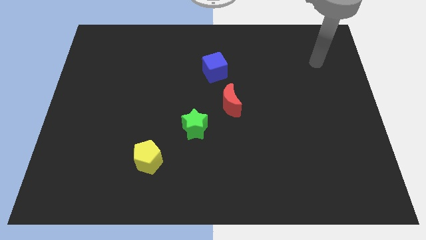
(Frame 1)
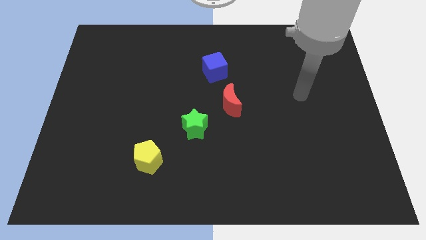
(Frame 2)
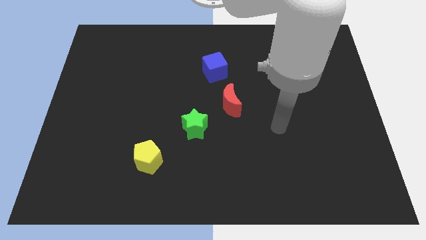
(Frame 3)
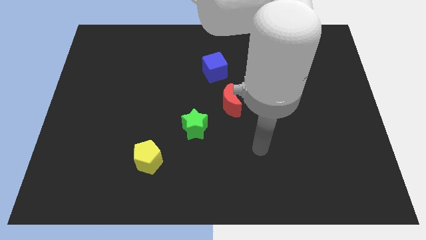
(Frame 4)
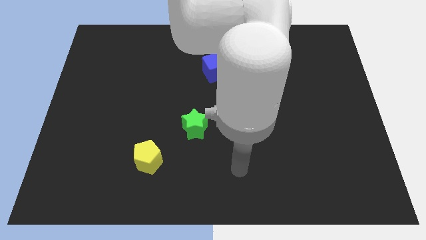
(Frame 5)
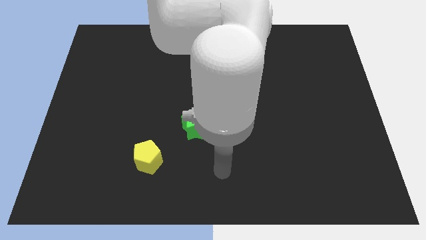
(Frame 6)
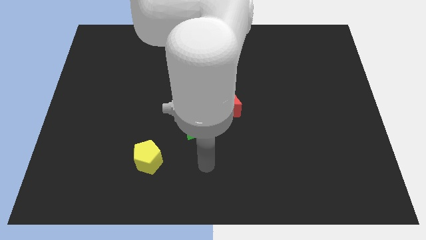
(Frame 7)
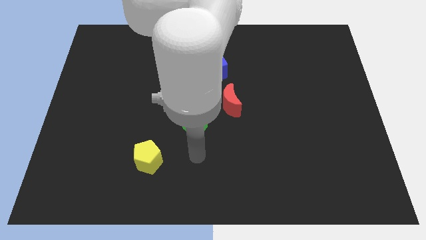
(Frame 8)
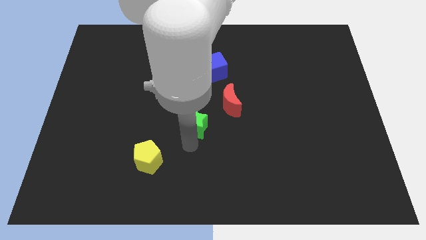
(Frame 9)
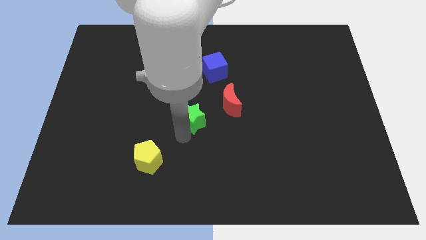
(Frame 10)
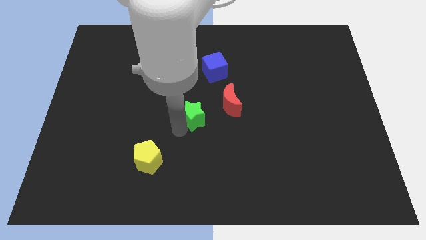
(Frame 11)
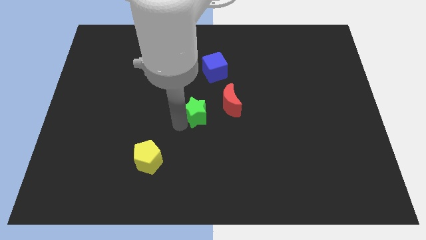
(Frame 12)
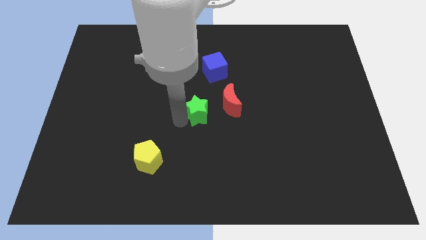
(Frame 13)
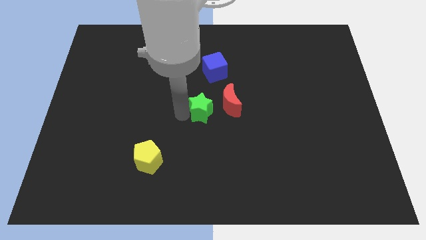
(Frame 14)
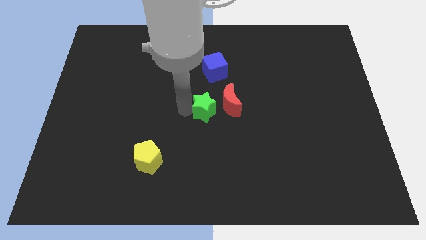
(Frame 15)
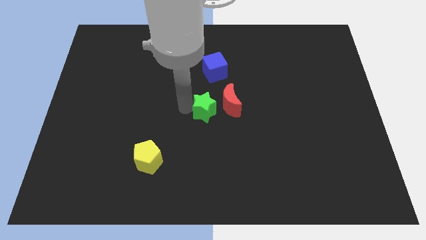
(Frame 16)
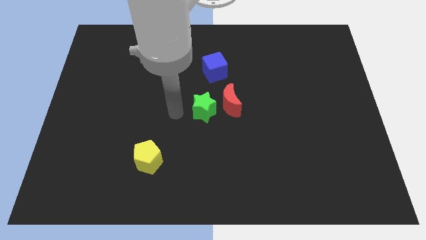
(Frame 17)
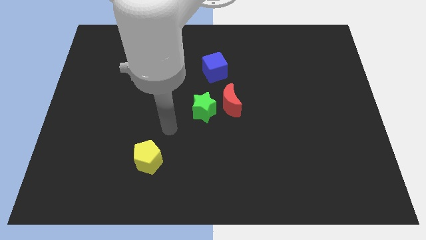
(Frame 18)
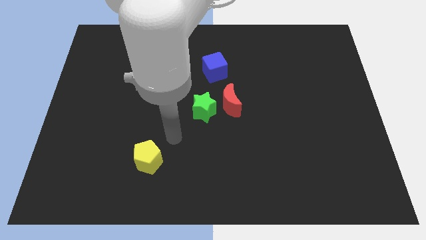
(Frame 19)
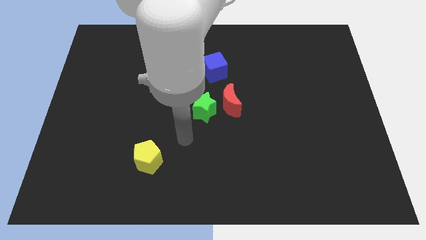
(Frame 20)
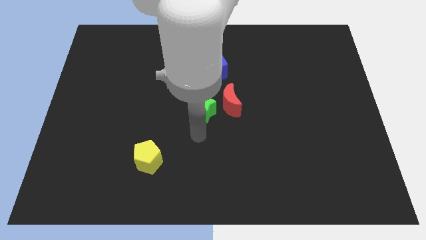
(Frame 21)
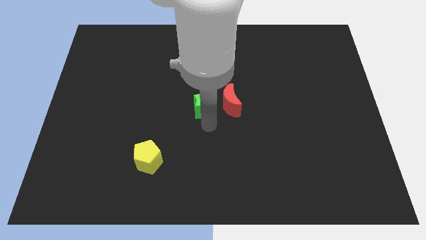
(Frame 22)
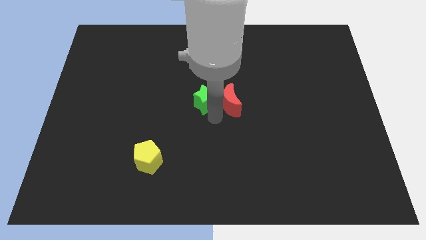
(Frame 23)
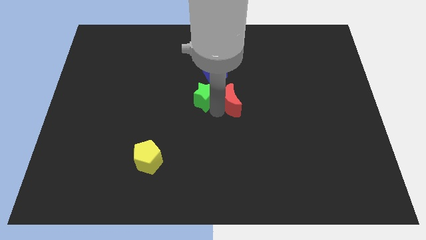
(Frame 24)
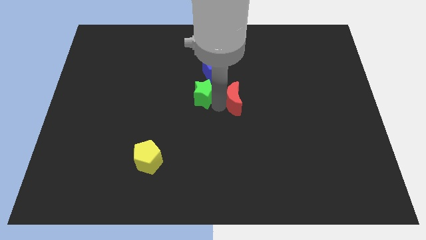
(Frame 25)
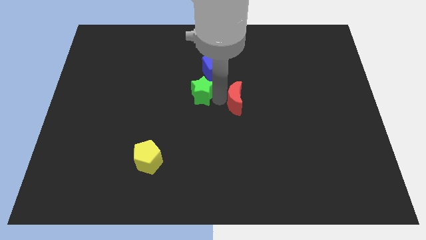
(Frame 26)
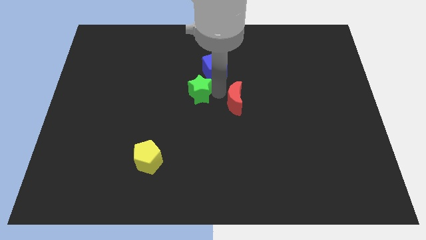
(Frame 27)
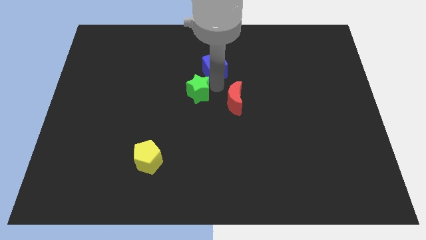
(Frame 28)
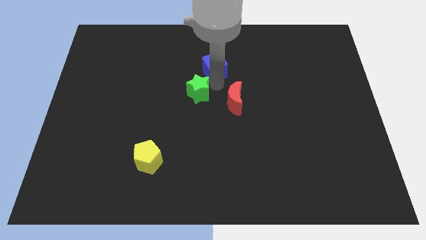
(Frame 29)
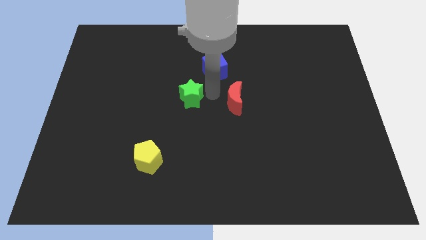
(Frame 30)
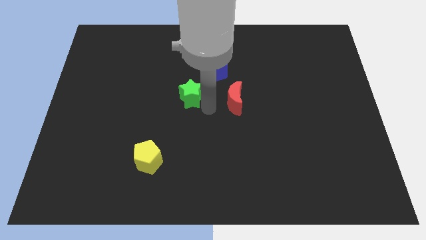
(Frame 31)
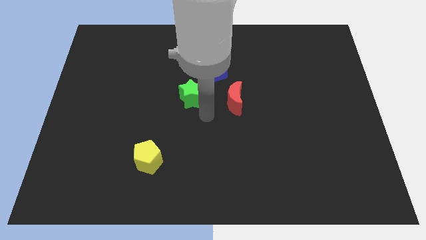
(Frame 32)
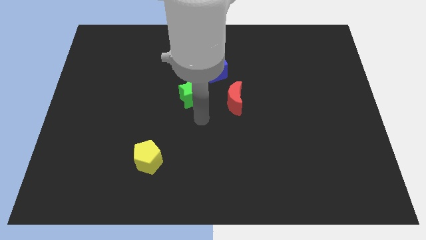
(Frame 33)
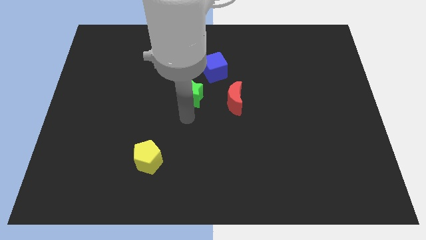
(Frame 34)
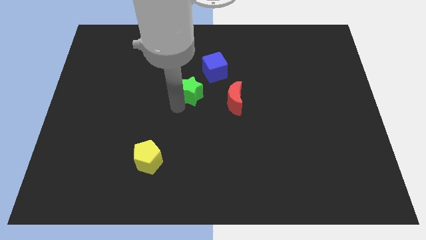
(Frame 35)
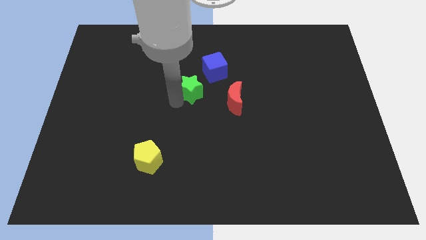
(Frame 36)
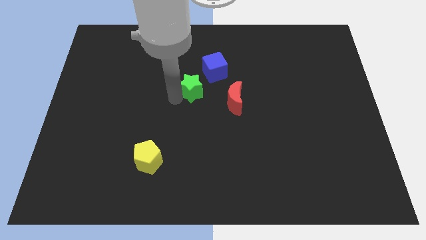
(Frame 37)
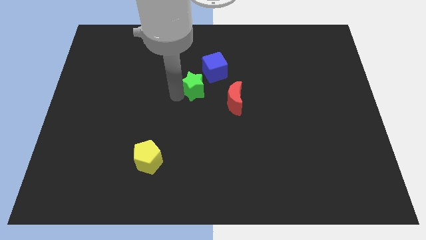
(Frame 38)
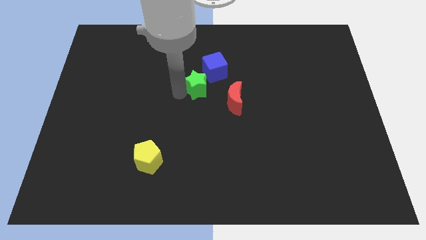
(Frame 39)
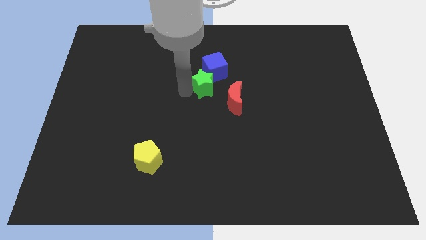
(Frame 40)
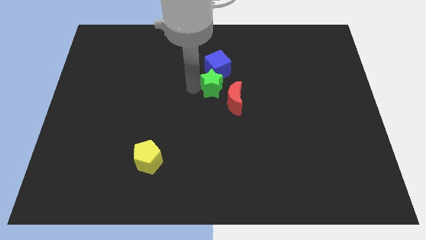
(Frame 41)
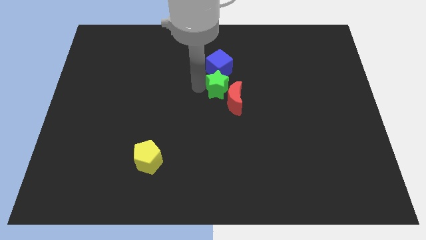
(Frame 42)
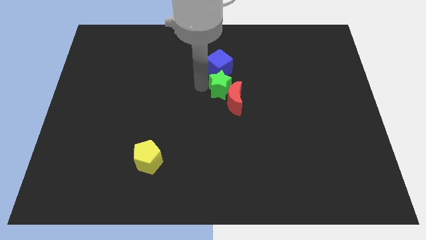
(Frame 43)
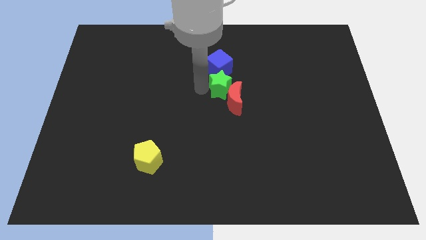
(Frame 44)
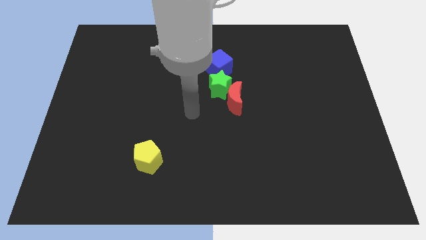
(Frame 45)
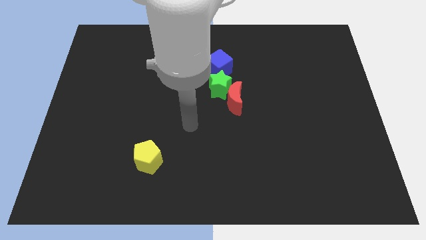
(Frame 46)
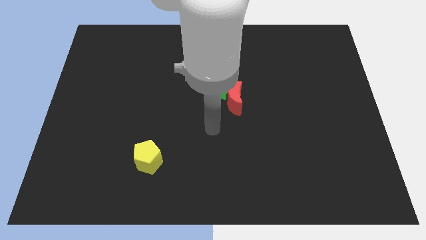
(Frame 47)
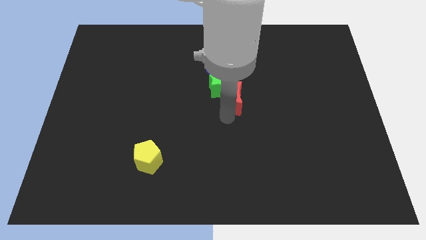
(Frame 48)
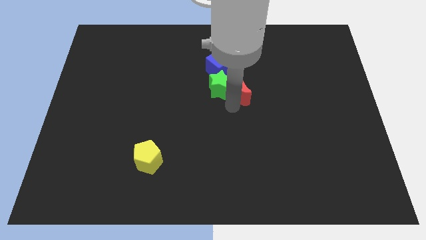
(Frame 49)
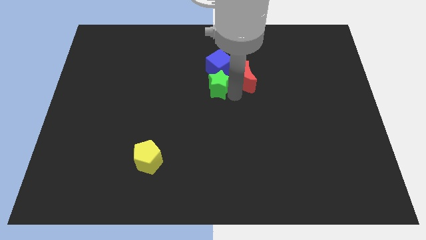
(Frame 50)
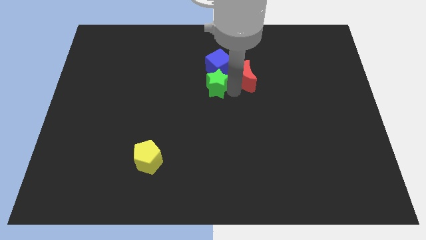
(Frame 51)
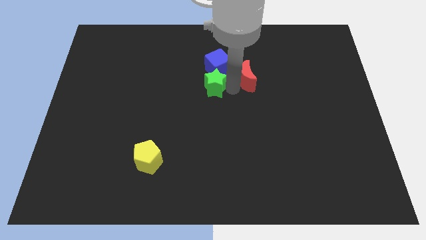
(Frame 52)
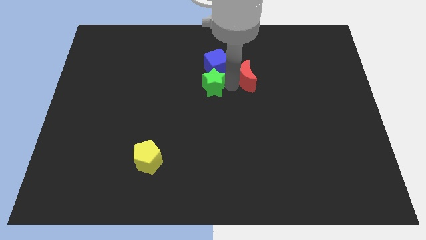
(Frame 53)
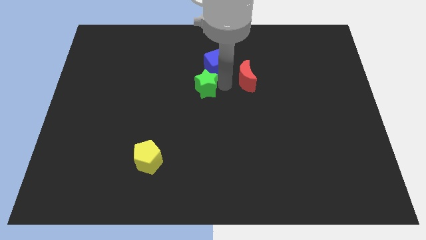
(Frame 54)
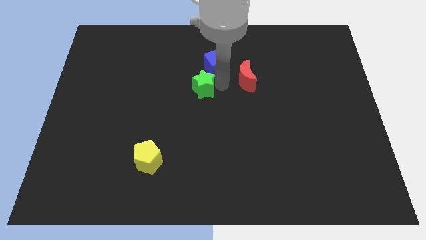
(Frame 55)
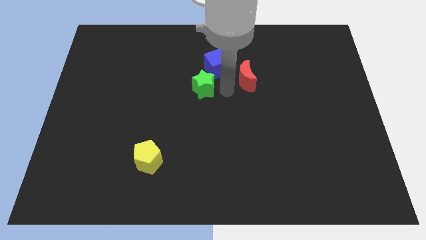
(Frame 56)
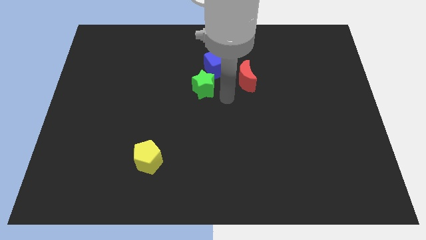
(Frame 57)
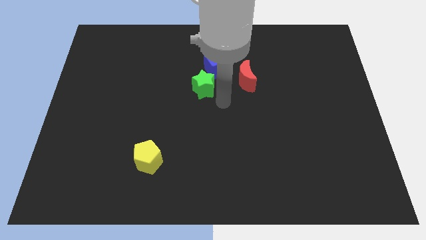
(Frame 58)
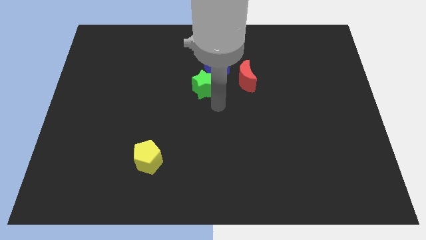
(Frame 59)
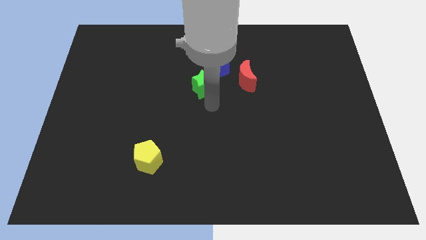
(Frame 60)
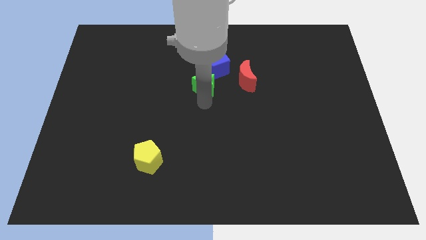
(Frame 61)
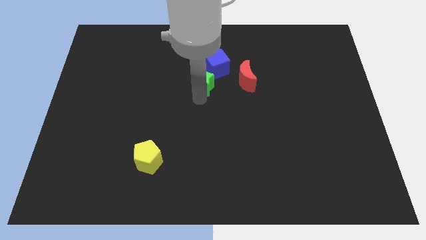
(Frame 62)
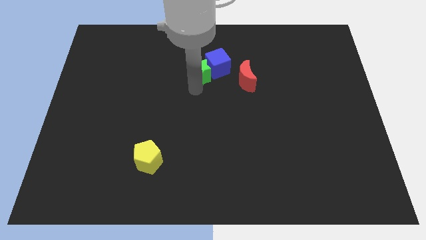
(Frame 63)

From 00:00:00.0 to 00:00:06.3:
push the star to the blue cube

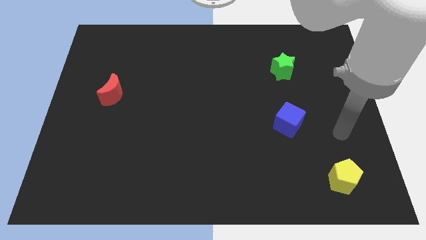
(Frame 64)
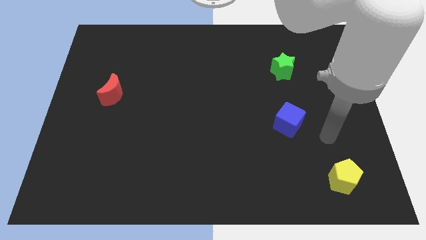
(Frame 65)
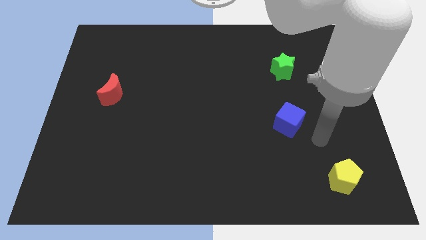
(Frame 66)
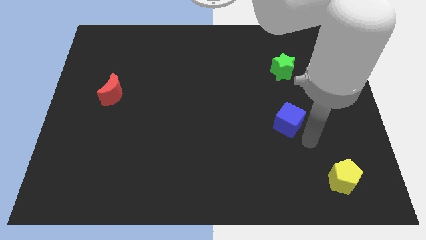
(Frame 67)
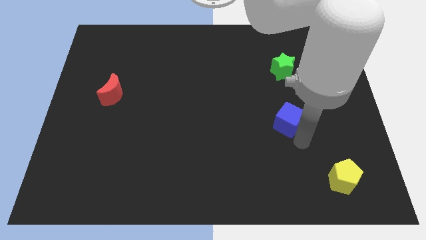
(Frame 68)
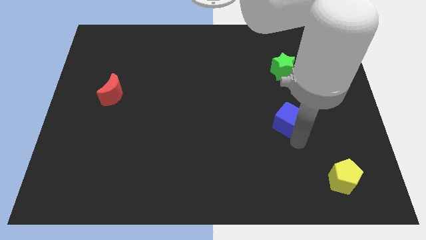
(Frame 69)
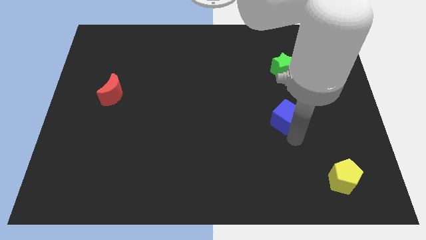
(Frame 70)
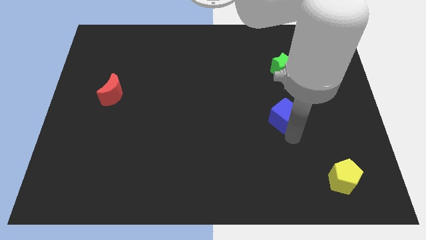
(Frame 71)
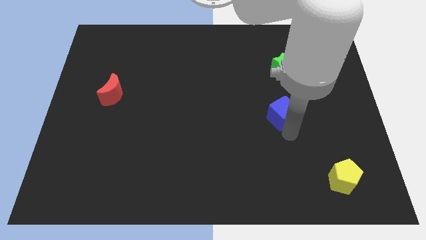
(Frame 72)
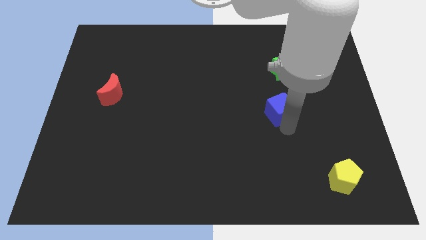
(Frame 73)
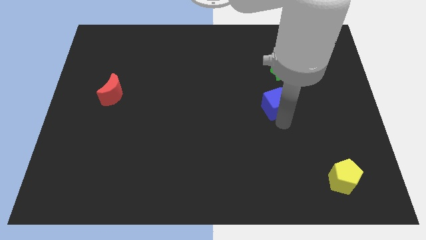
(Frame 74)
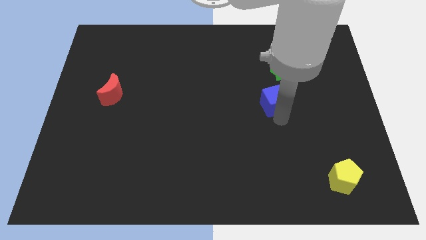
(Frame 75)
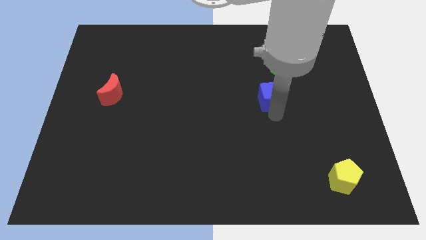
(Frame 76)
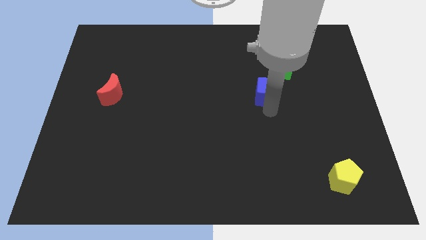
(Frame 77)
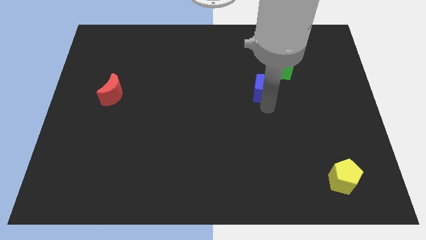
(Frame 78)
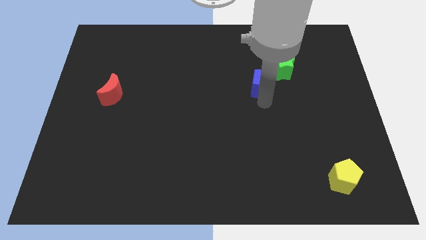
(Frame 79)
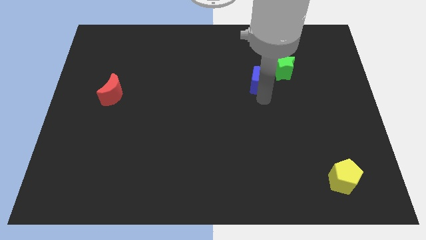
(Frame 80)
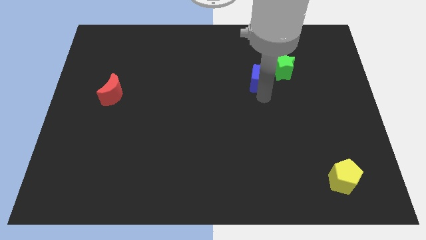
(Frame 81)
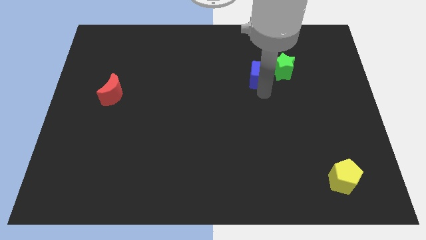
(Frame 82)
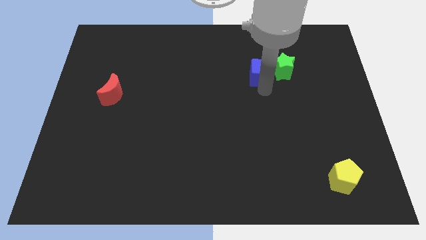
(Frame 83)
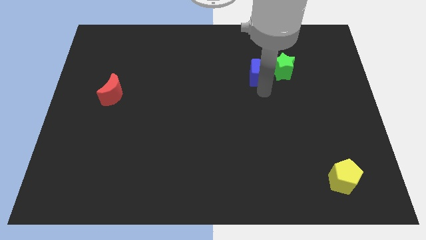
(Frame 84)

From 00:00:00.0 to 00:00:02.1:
put the blue cube next to the green block
